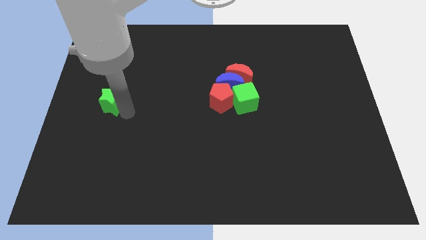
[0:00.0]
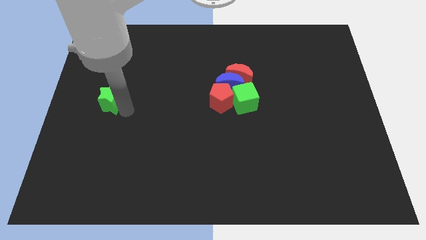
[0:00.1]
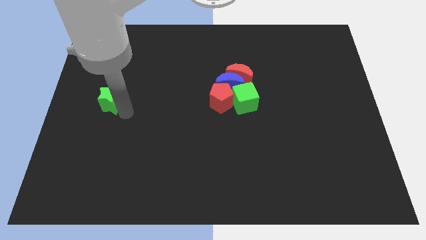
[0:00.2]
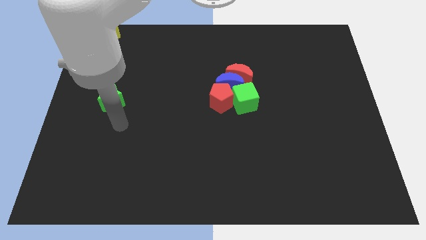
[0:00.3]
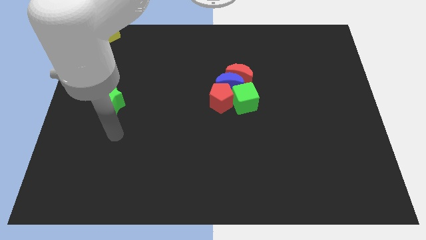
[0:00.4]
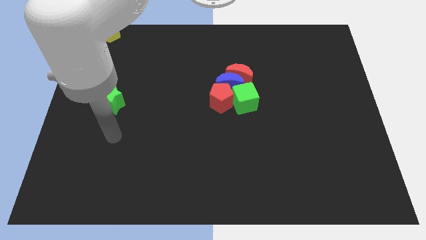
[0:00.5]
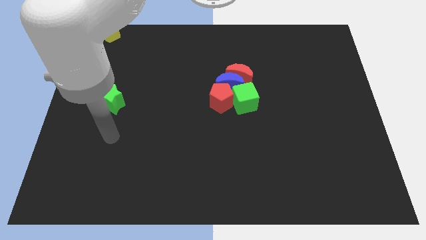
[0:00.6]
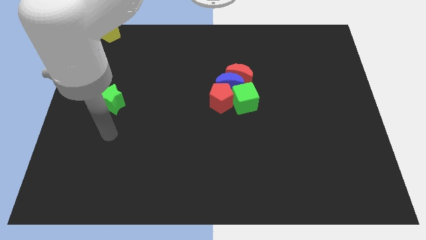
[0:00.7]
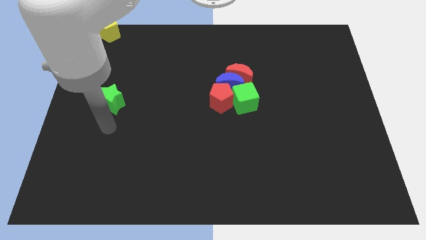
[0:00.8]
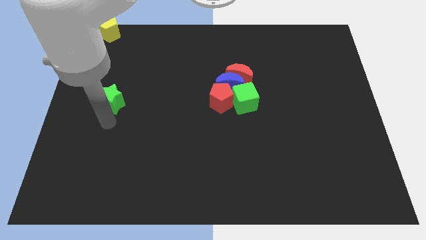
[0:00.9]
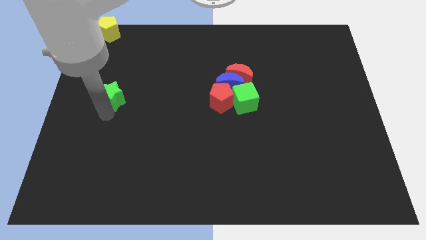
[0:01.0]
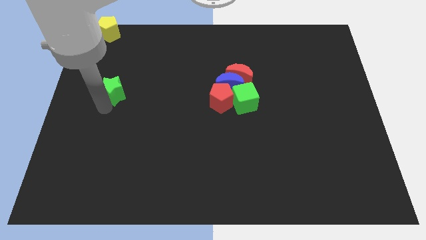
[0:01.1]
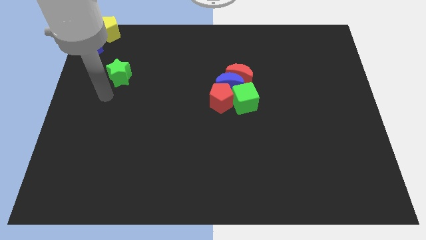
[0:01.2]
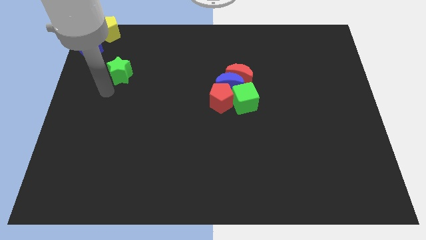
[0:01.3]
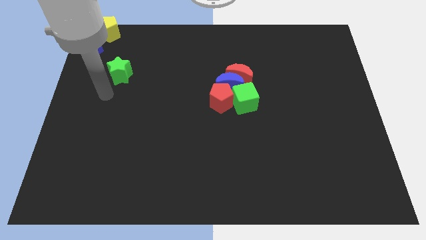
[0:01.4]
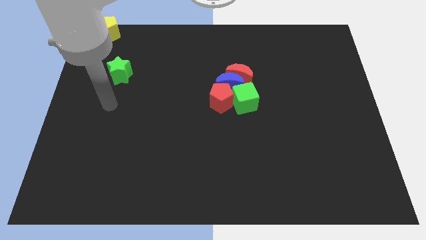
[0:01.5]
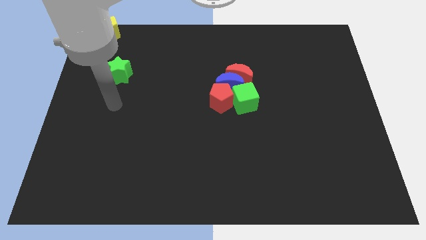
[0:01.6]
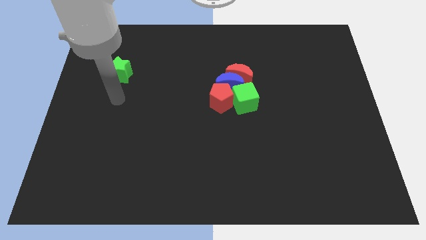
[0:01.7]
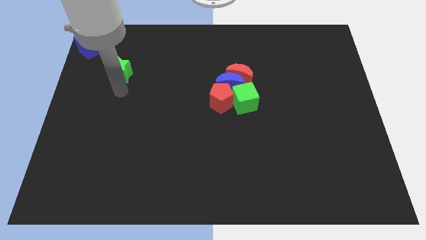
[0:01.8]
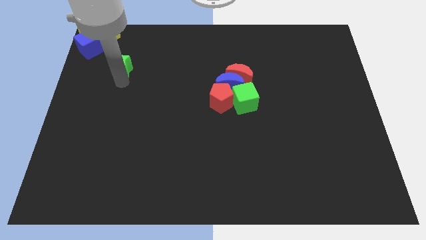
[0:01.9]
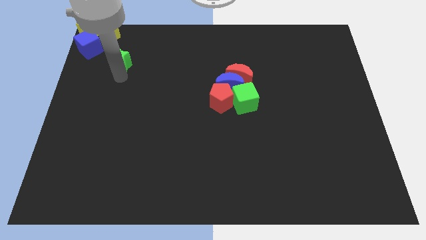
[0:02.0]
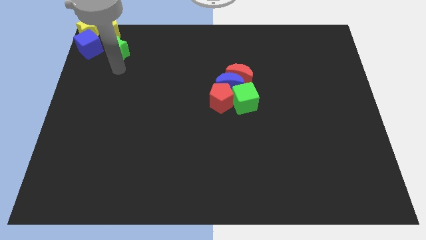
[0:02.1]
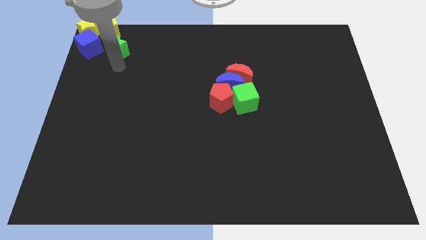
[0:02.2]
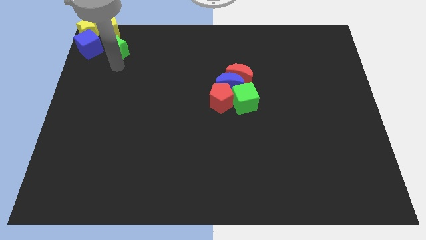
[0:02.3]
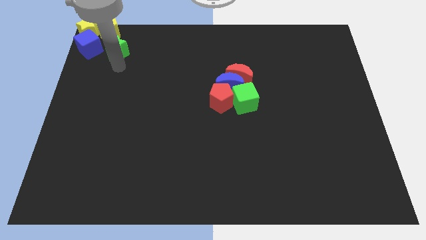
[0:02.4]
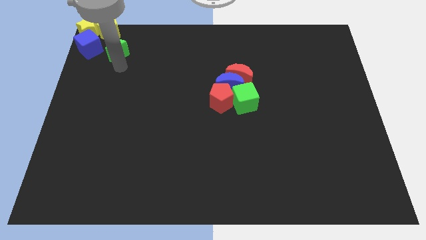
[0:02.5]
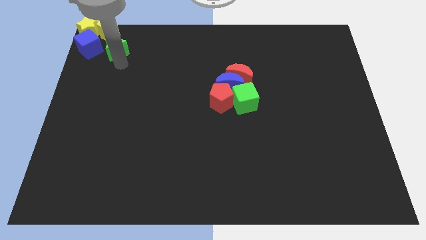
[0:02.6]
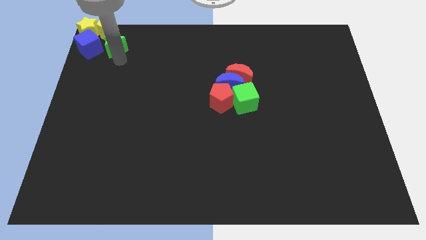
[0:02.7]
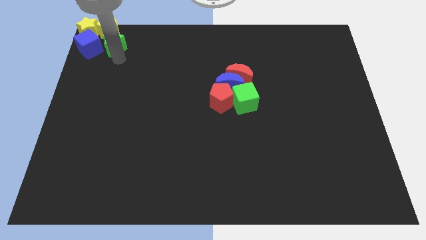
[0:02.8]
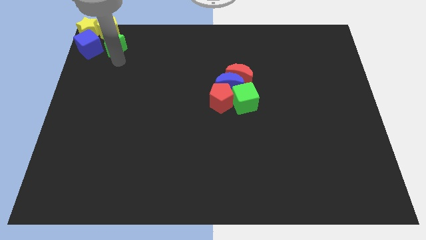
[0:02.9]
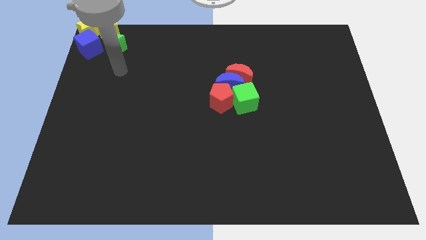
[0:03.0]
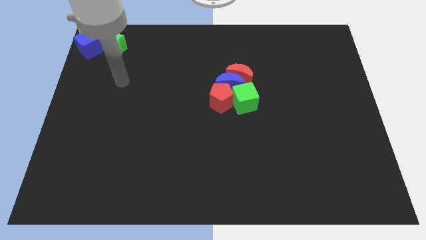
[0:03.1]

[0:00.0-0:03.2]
push the green star right to the blue cube

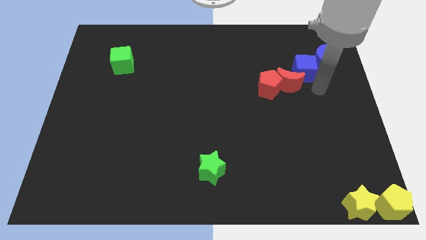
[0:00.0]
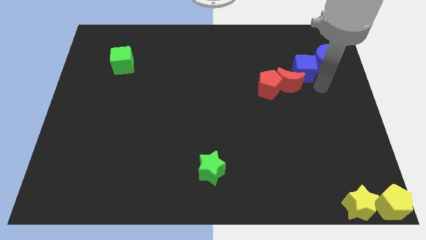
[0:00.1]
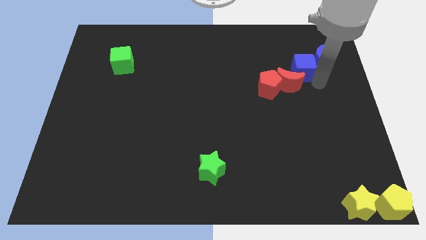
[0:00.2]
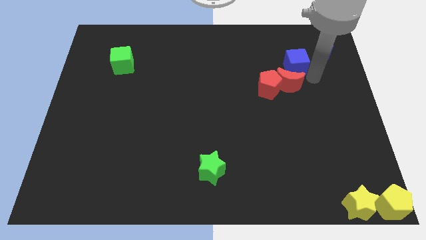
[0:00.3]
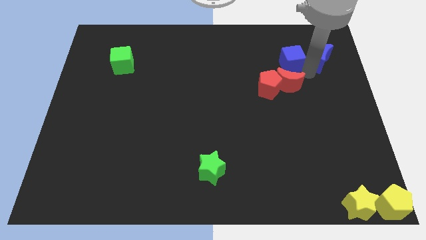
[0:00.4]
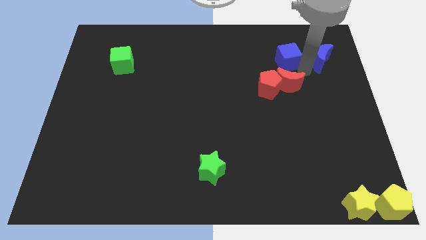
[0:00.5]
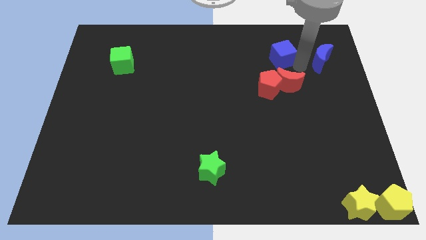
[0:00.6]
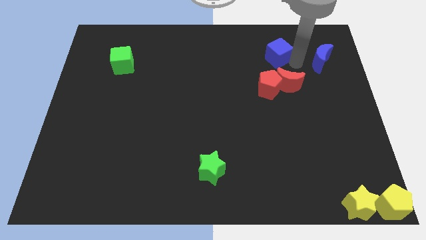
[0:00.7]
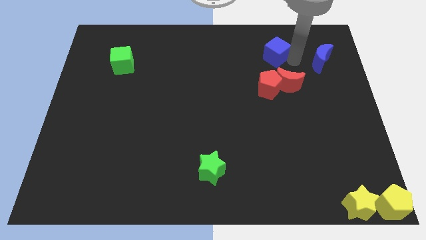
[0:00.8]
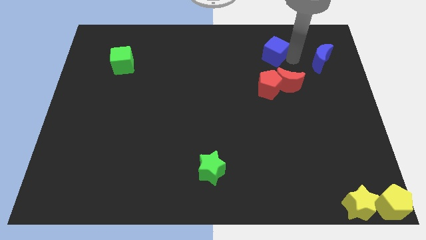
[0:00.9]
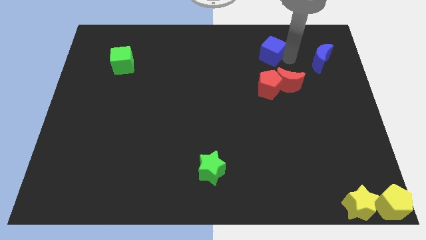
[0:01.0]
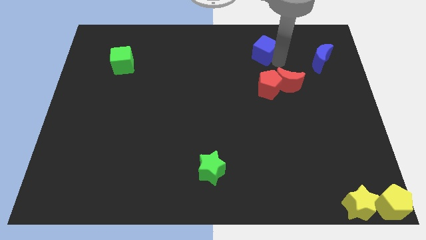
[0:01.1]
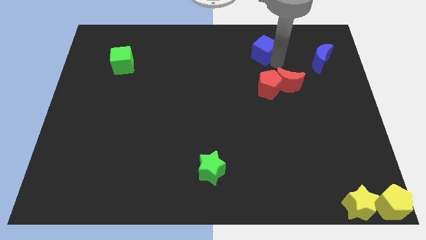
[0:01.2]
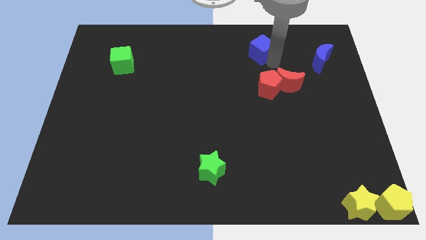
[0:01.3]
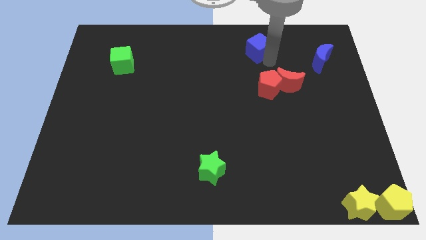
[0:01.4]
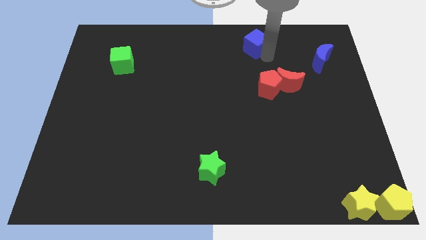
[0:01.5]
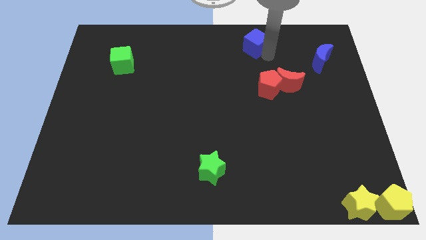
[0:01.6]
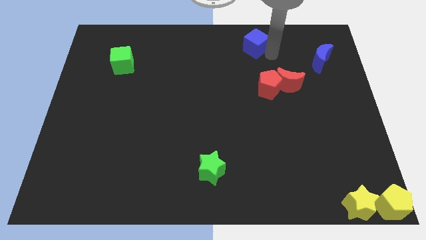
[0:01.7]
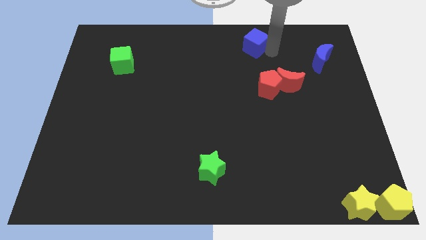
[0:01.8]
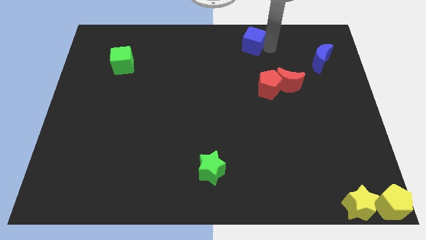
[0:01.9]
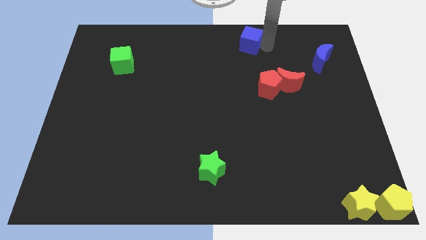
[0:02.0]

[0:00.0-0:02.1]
place the blue cube at the top of the red moon

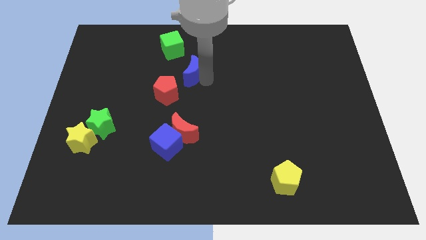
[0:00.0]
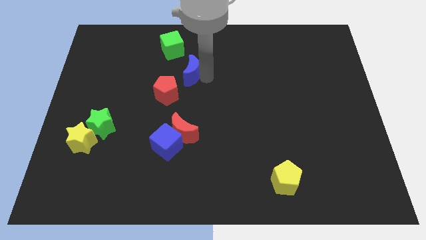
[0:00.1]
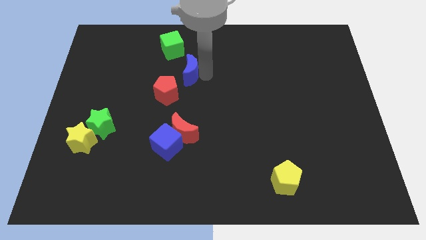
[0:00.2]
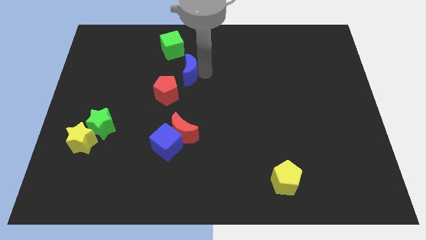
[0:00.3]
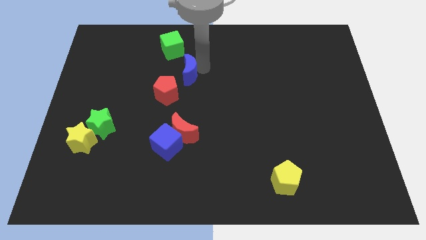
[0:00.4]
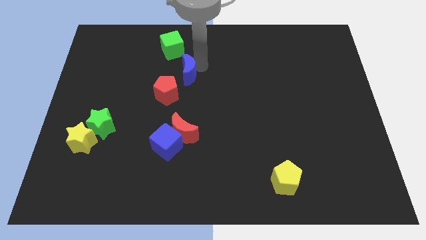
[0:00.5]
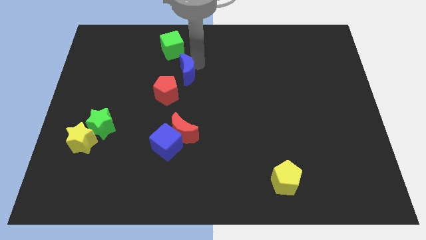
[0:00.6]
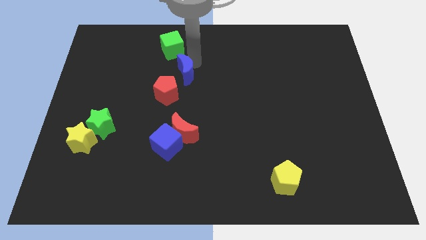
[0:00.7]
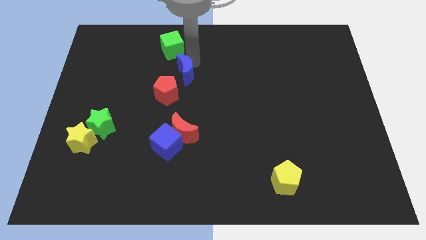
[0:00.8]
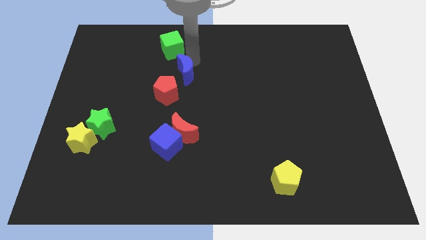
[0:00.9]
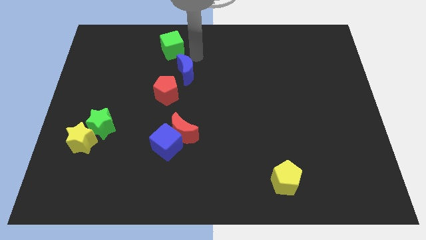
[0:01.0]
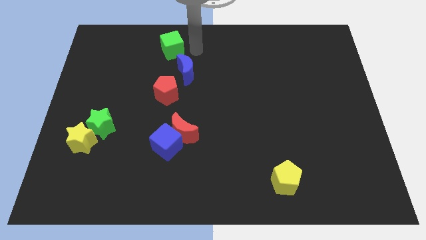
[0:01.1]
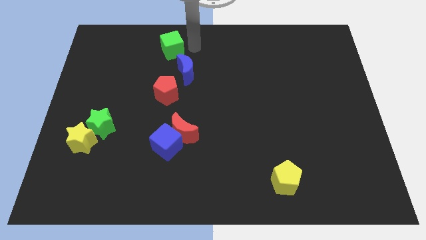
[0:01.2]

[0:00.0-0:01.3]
slide the blue moon diagonally top right to red pentagon

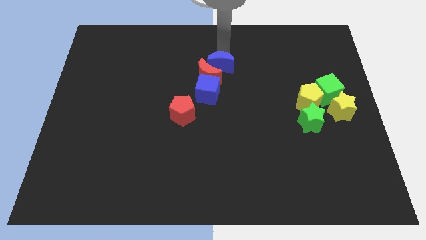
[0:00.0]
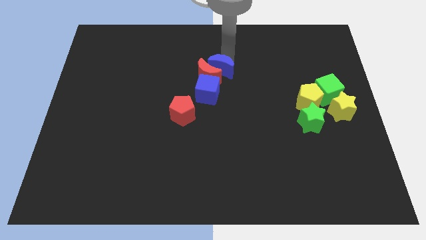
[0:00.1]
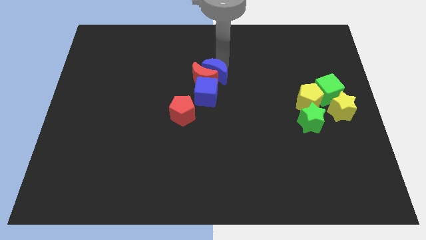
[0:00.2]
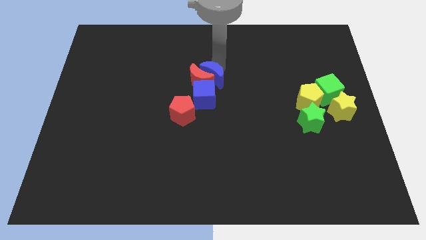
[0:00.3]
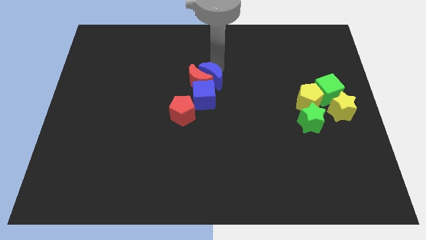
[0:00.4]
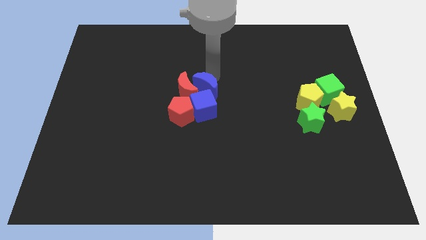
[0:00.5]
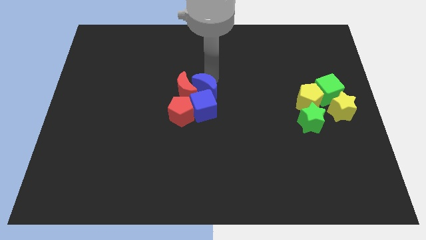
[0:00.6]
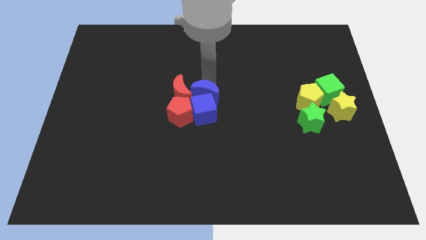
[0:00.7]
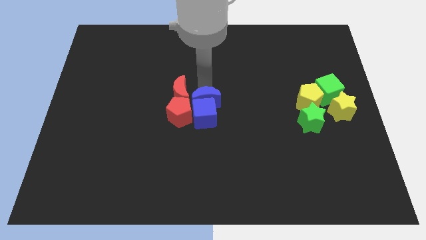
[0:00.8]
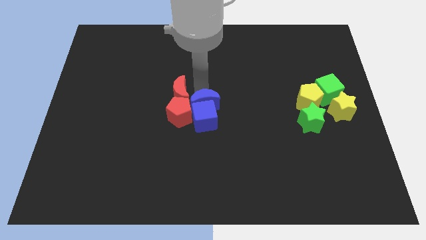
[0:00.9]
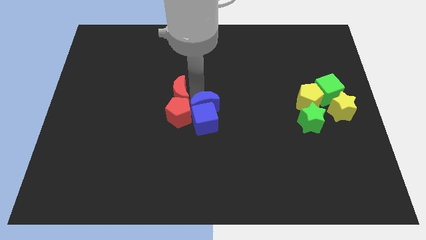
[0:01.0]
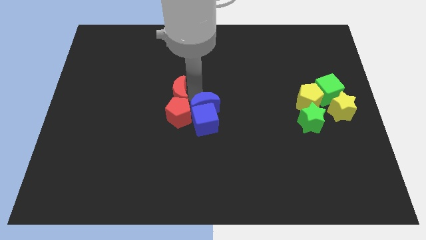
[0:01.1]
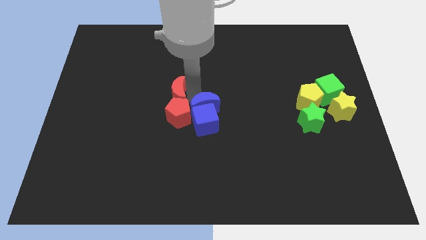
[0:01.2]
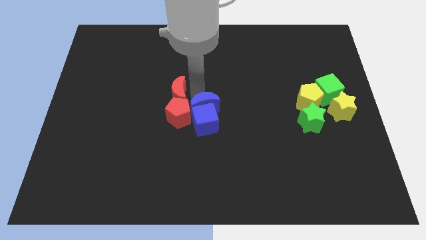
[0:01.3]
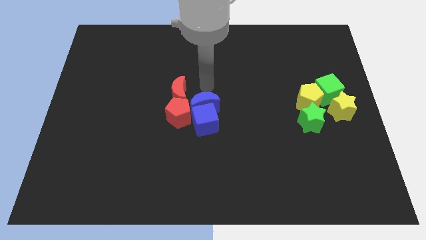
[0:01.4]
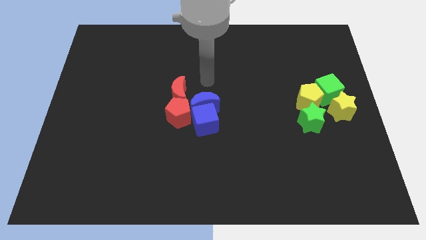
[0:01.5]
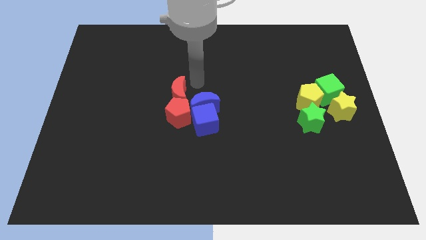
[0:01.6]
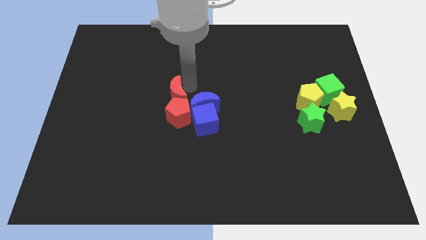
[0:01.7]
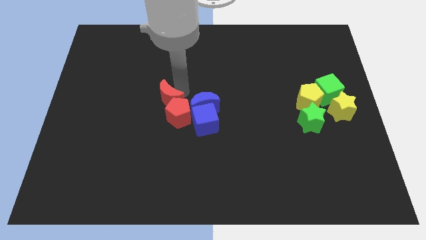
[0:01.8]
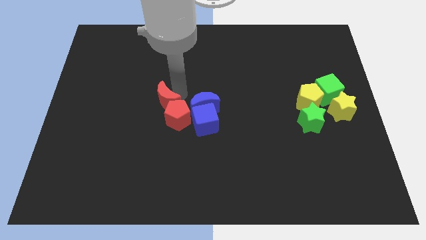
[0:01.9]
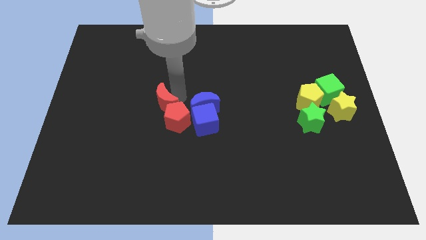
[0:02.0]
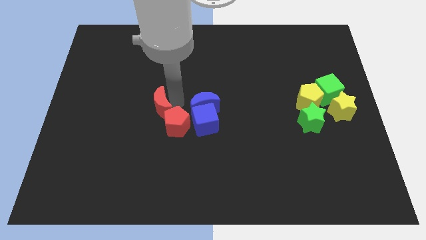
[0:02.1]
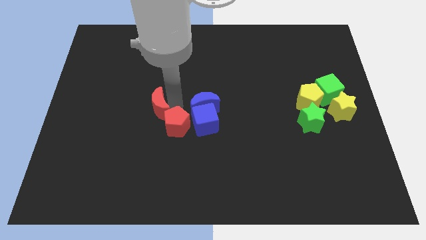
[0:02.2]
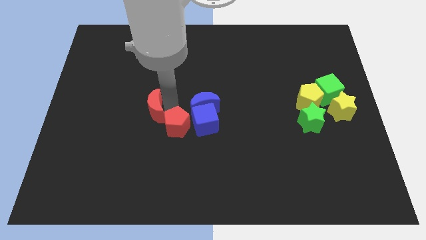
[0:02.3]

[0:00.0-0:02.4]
push the red and blue blocks towards the bottom side of the board
